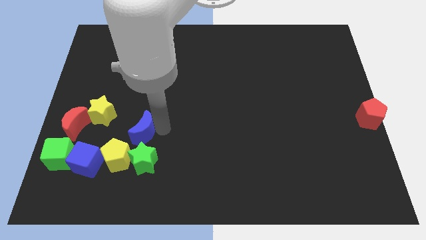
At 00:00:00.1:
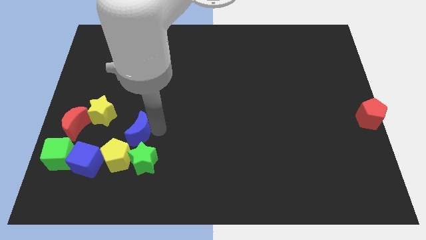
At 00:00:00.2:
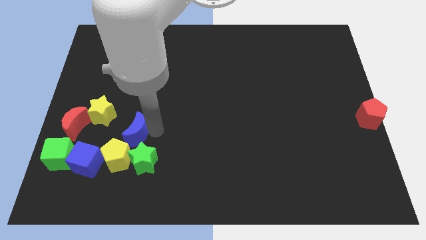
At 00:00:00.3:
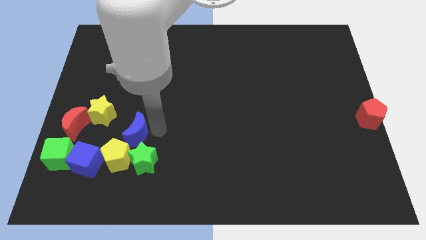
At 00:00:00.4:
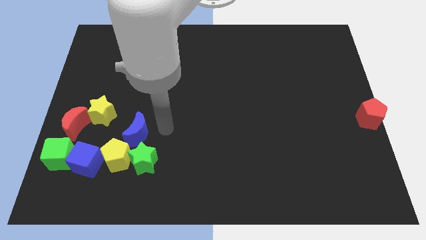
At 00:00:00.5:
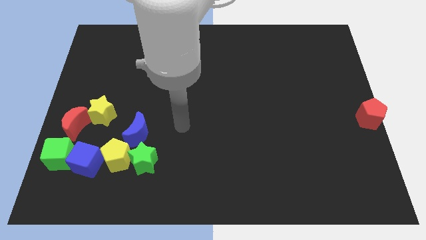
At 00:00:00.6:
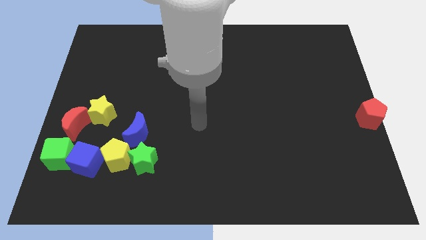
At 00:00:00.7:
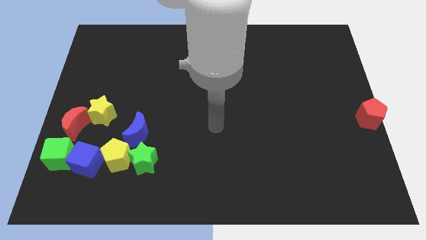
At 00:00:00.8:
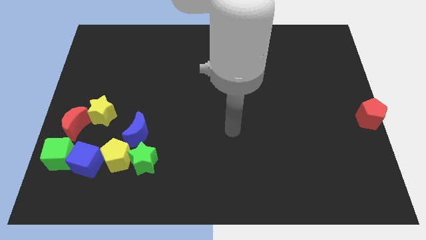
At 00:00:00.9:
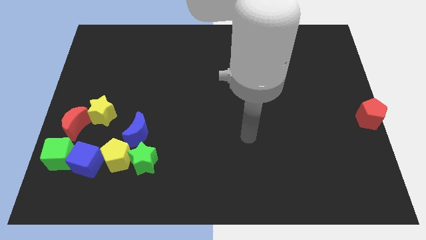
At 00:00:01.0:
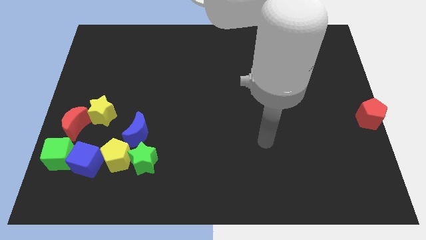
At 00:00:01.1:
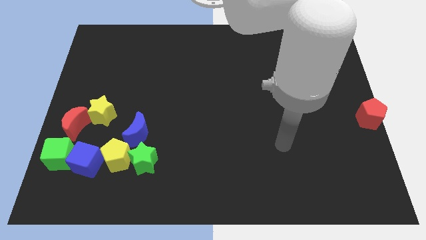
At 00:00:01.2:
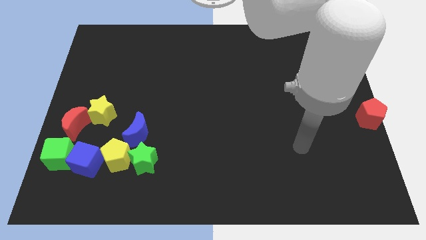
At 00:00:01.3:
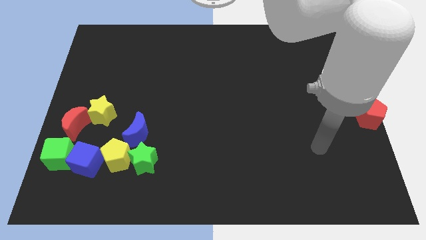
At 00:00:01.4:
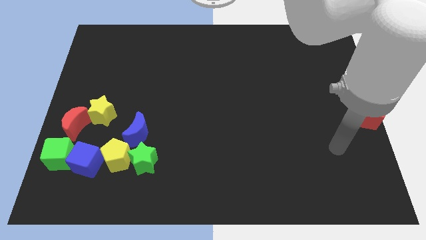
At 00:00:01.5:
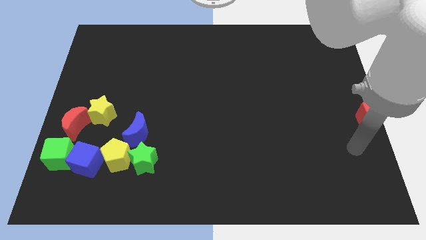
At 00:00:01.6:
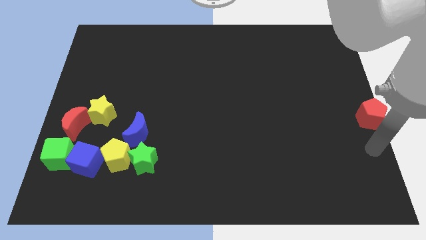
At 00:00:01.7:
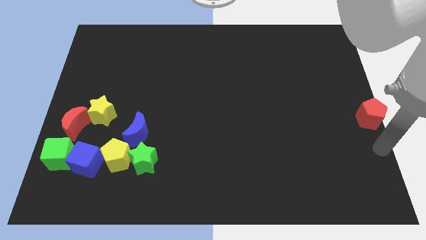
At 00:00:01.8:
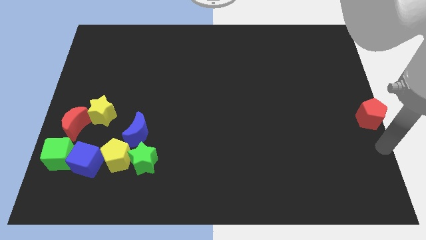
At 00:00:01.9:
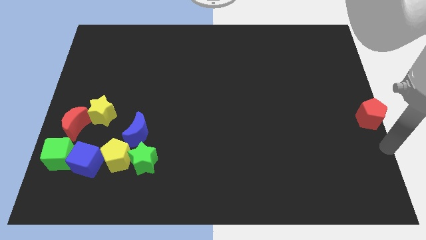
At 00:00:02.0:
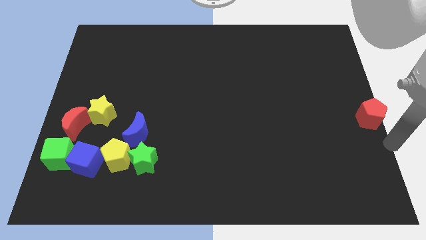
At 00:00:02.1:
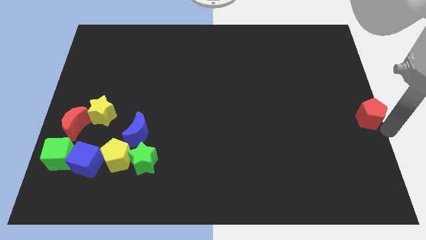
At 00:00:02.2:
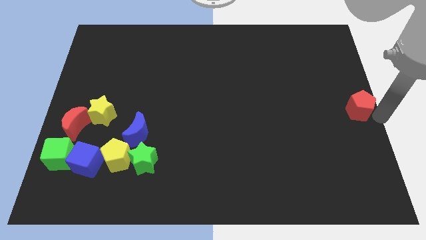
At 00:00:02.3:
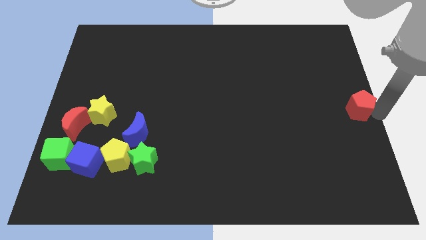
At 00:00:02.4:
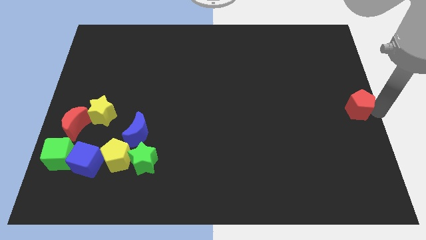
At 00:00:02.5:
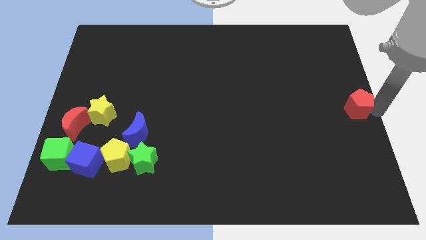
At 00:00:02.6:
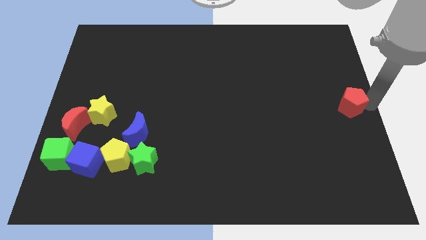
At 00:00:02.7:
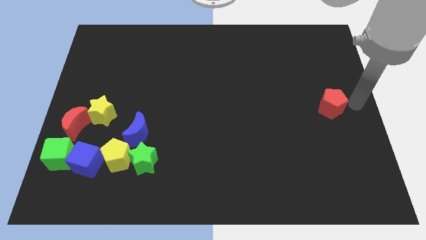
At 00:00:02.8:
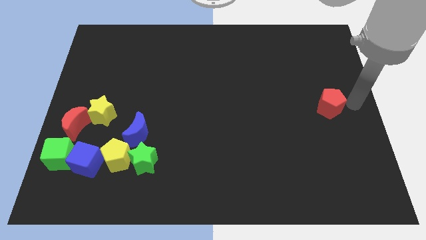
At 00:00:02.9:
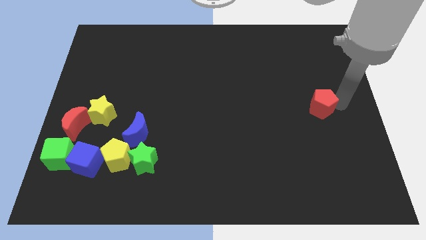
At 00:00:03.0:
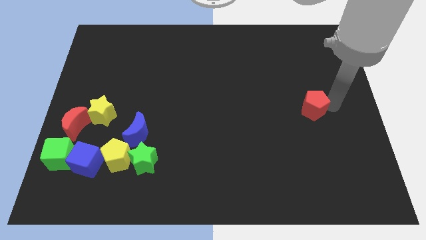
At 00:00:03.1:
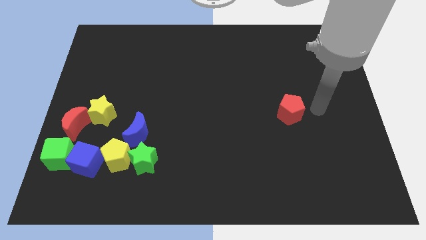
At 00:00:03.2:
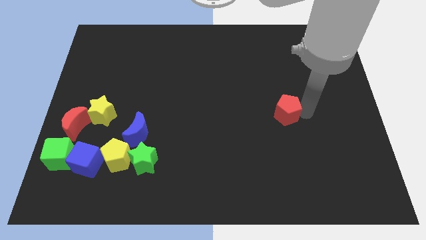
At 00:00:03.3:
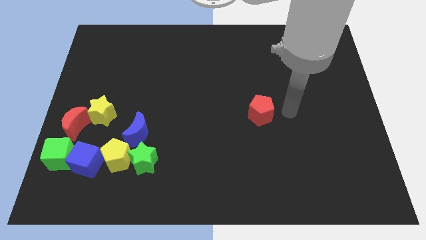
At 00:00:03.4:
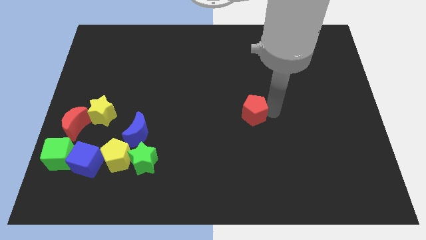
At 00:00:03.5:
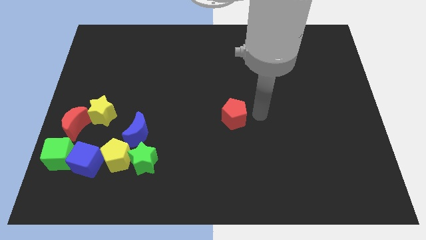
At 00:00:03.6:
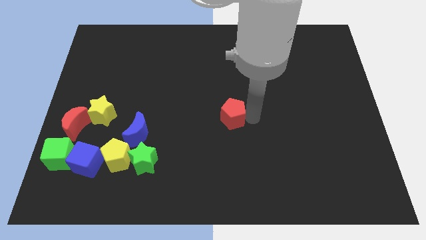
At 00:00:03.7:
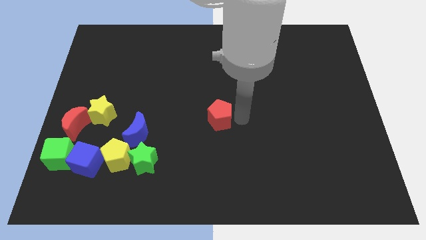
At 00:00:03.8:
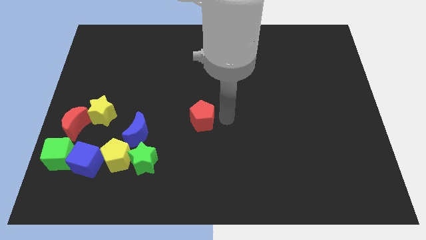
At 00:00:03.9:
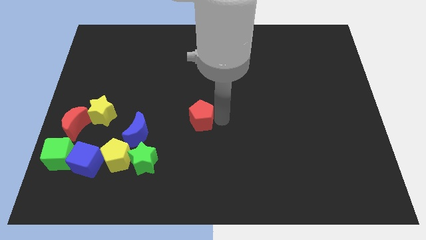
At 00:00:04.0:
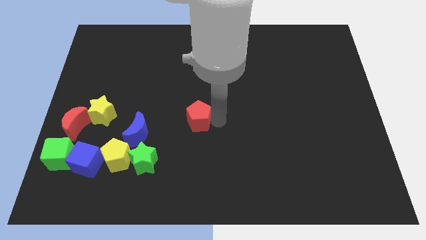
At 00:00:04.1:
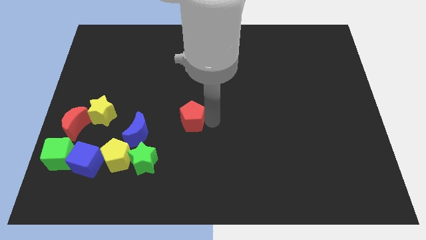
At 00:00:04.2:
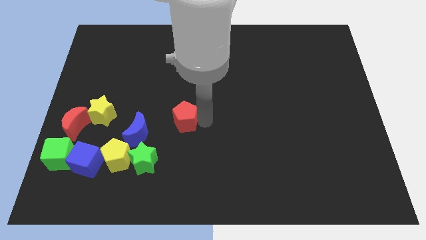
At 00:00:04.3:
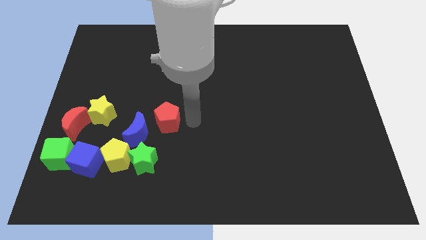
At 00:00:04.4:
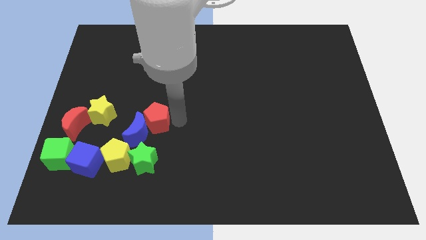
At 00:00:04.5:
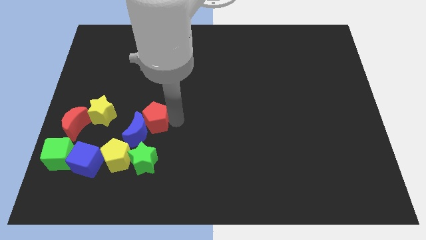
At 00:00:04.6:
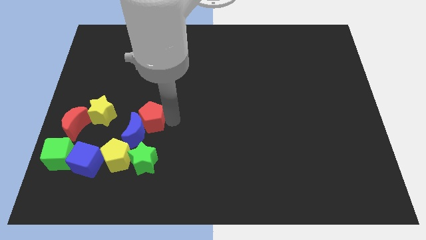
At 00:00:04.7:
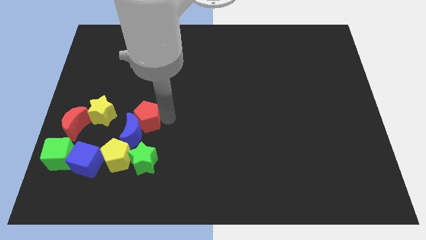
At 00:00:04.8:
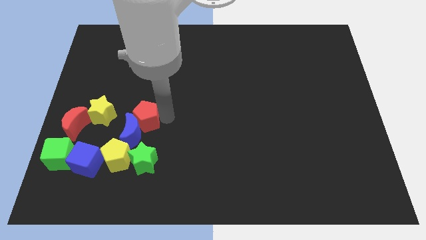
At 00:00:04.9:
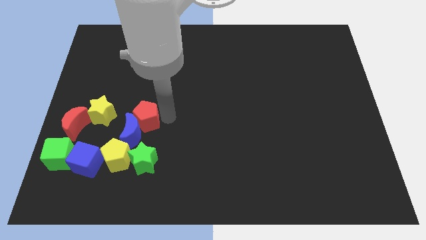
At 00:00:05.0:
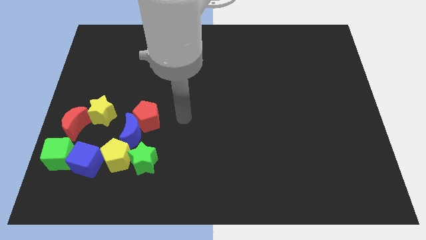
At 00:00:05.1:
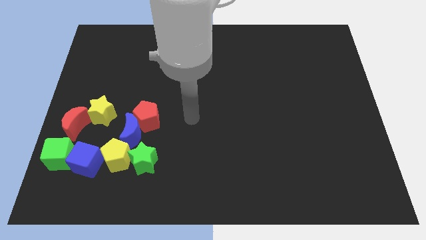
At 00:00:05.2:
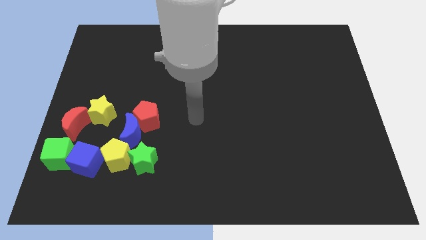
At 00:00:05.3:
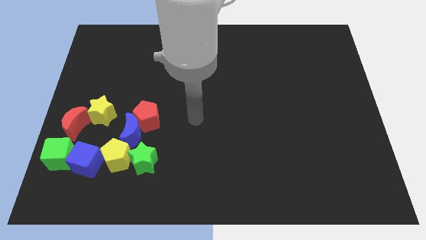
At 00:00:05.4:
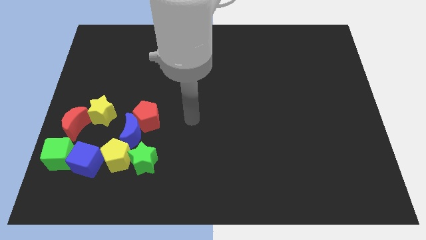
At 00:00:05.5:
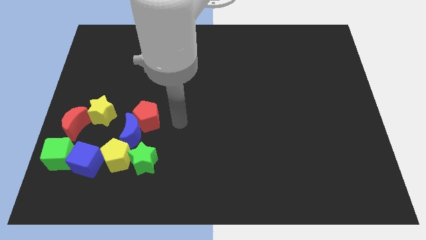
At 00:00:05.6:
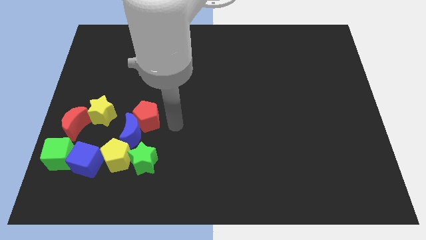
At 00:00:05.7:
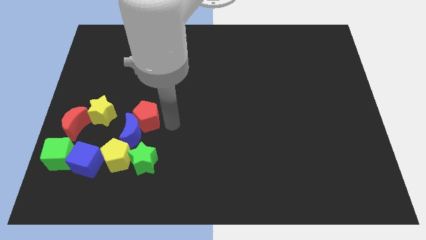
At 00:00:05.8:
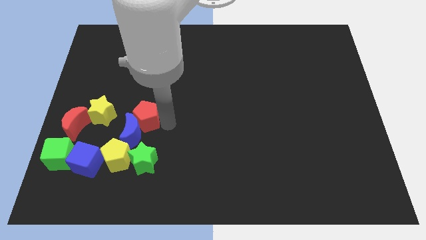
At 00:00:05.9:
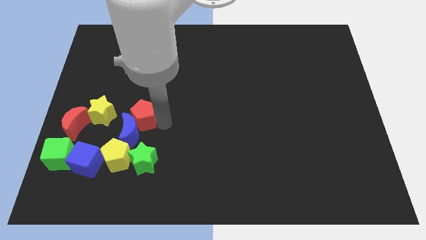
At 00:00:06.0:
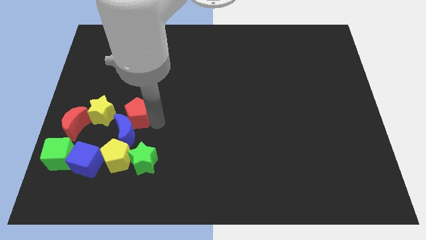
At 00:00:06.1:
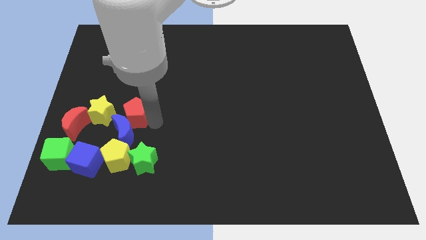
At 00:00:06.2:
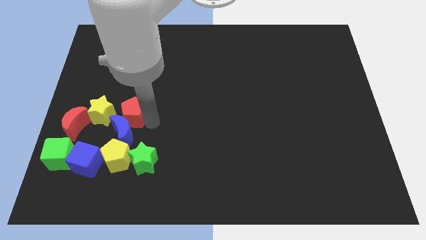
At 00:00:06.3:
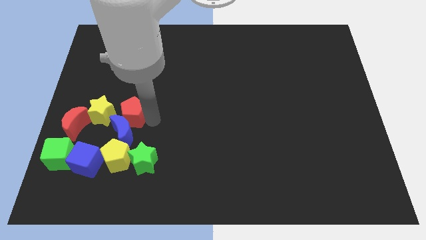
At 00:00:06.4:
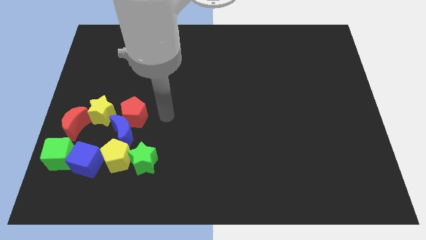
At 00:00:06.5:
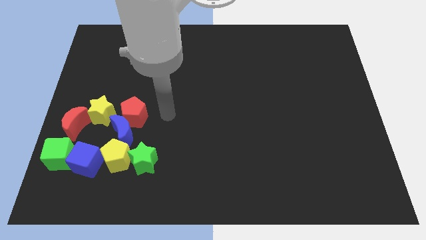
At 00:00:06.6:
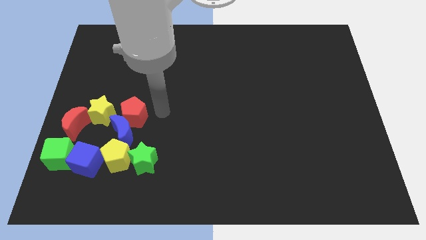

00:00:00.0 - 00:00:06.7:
push the red pentagon towards the yellow star

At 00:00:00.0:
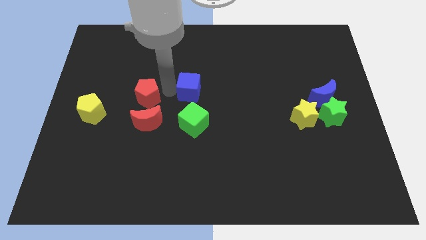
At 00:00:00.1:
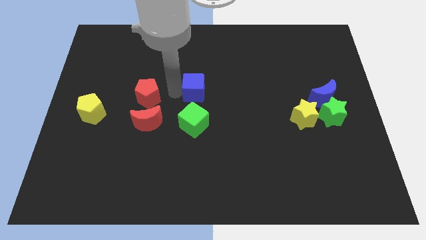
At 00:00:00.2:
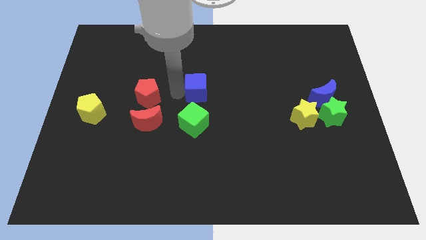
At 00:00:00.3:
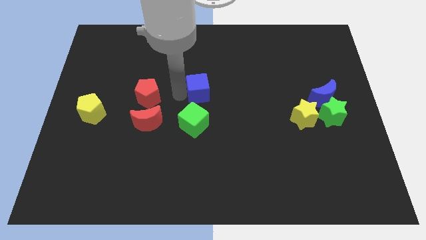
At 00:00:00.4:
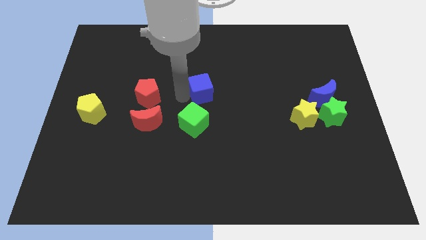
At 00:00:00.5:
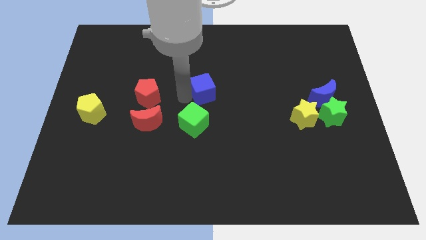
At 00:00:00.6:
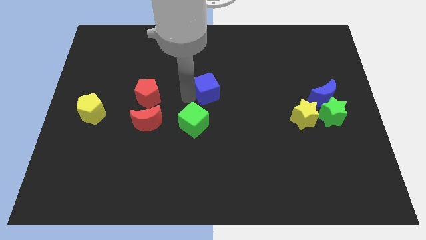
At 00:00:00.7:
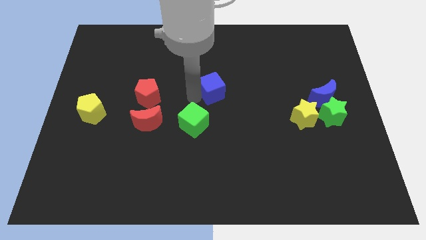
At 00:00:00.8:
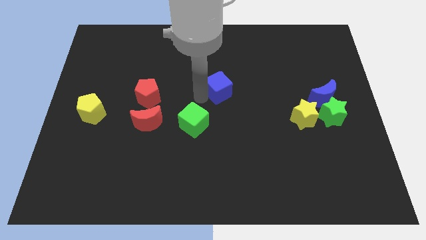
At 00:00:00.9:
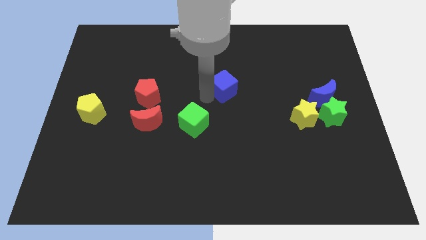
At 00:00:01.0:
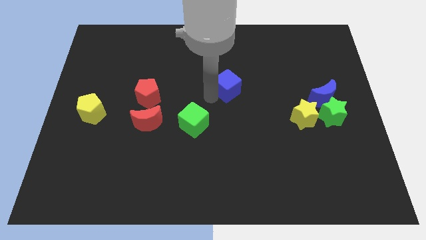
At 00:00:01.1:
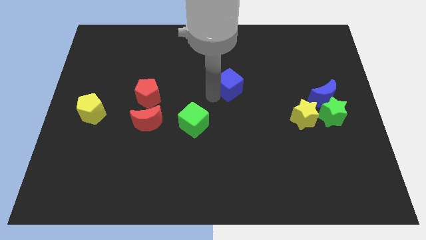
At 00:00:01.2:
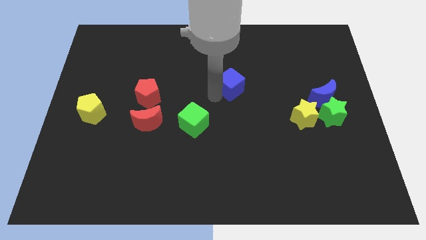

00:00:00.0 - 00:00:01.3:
separate the blue cube from the green square

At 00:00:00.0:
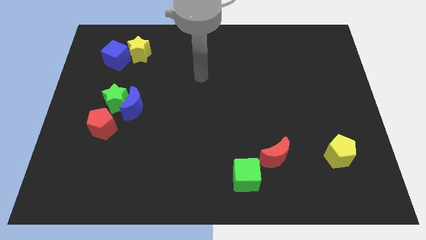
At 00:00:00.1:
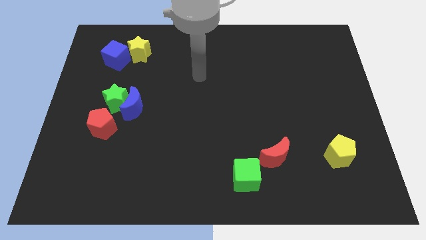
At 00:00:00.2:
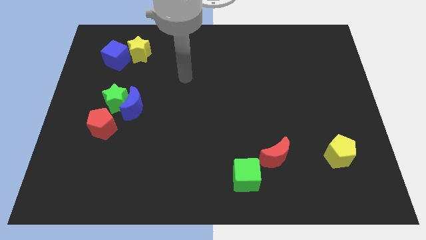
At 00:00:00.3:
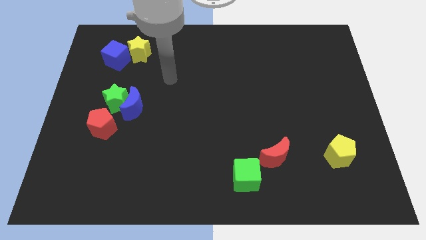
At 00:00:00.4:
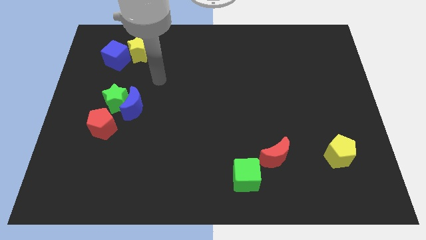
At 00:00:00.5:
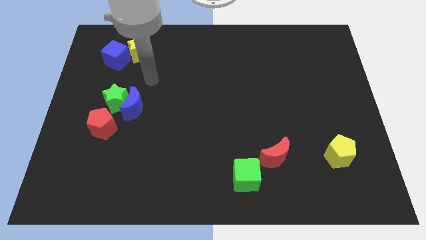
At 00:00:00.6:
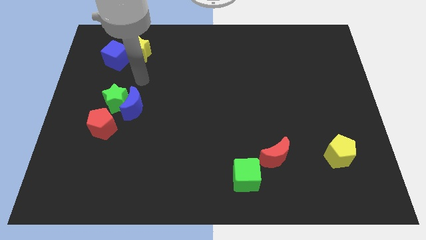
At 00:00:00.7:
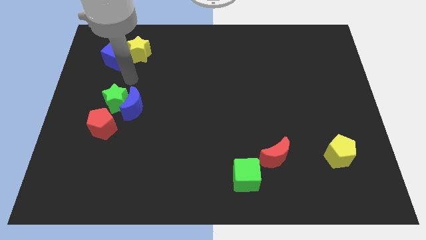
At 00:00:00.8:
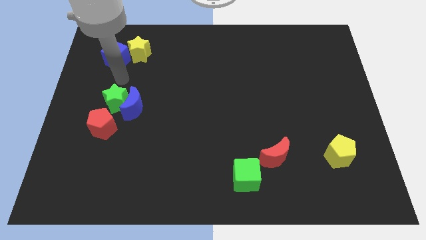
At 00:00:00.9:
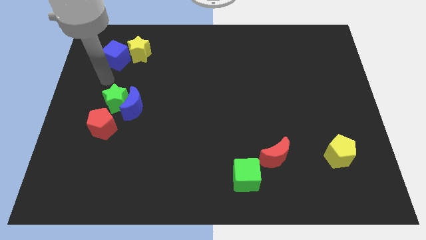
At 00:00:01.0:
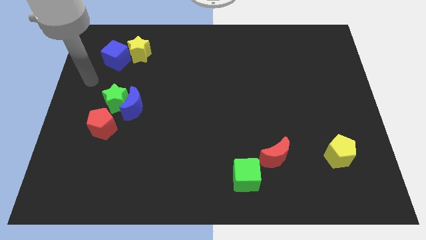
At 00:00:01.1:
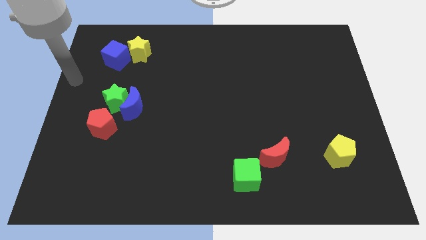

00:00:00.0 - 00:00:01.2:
place your arm to the center left side of the board
